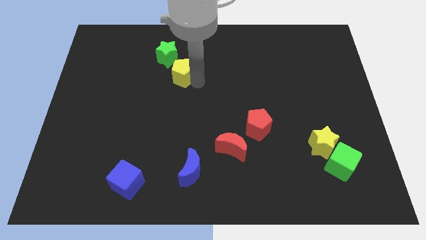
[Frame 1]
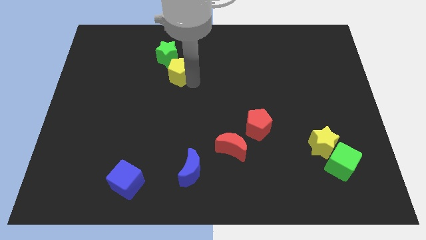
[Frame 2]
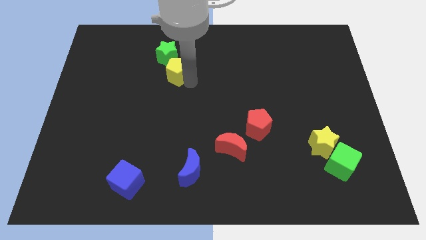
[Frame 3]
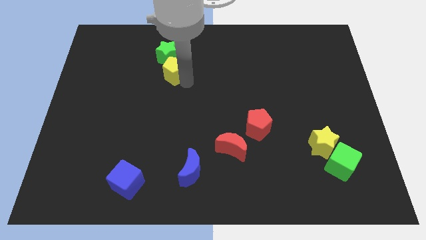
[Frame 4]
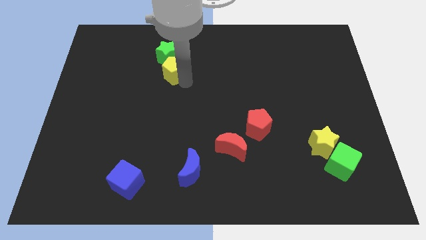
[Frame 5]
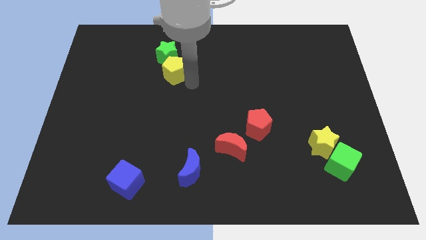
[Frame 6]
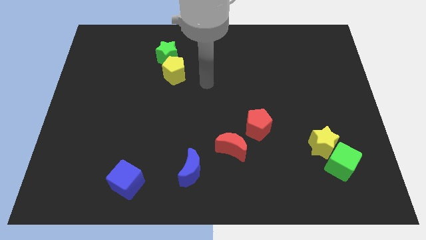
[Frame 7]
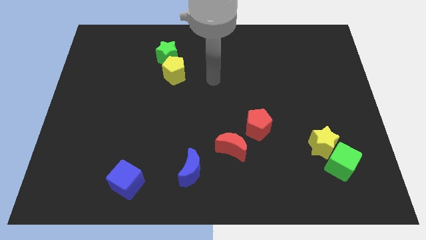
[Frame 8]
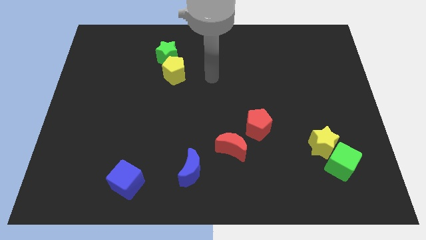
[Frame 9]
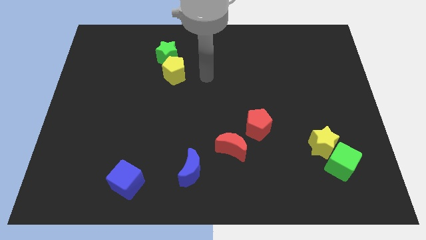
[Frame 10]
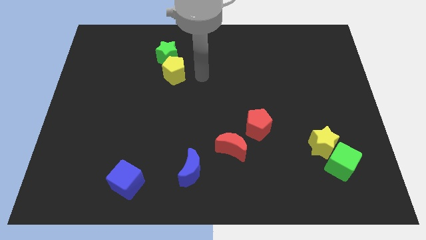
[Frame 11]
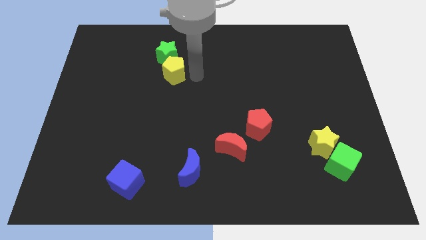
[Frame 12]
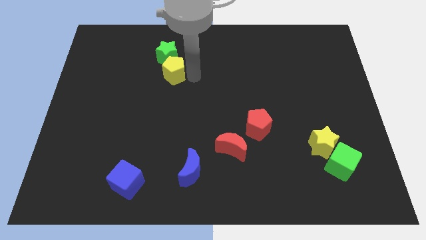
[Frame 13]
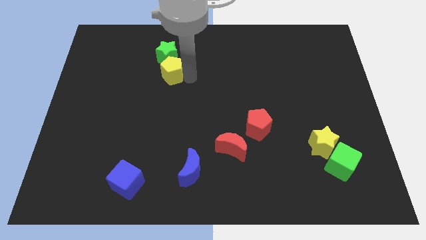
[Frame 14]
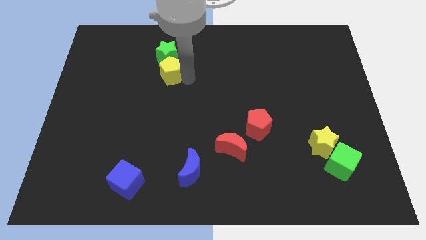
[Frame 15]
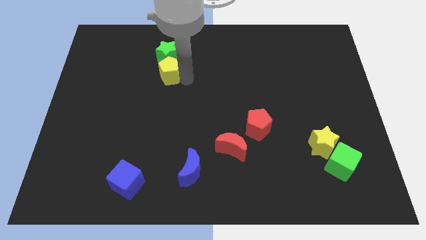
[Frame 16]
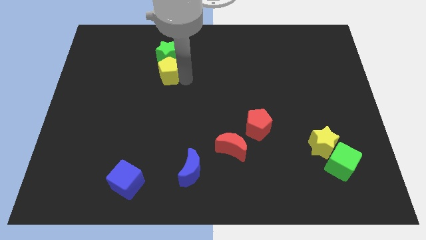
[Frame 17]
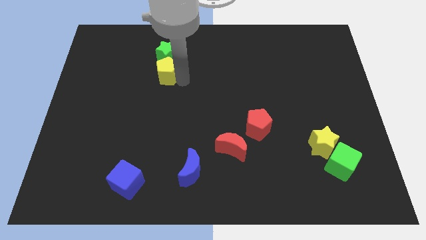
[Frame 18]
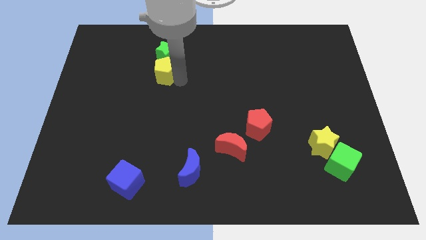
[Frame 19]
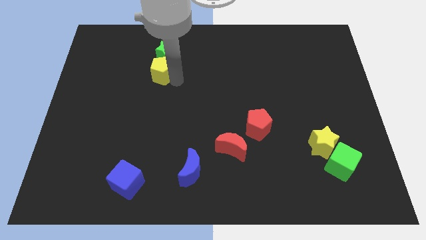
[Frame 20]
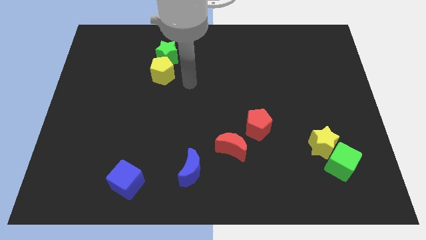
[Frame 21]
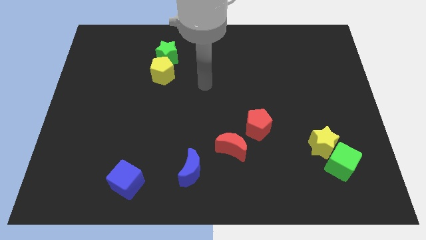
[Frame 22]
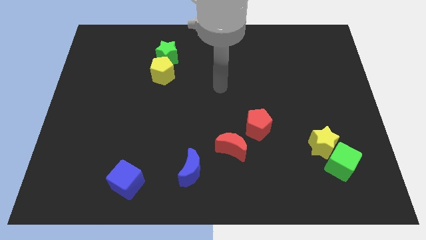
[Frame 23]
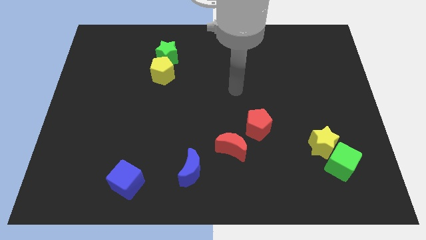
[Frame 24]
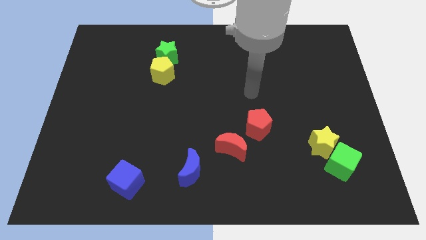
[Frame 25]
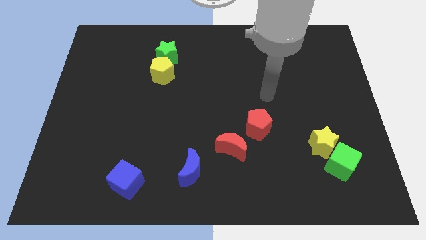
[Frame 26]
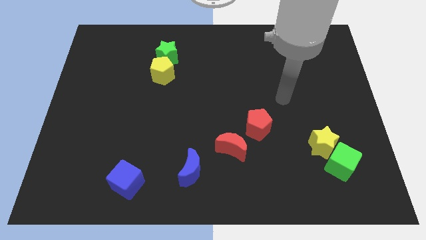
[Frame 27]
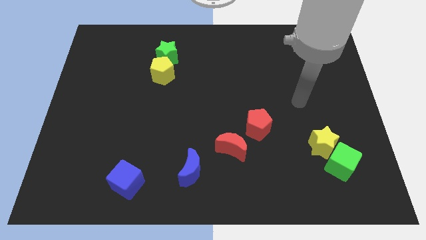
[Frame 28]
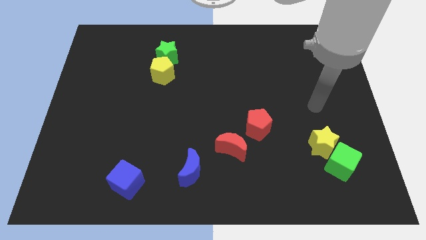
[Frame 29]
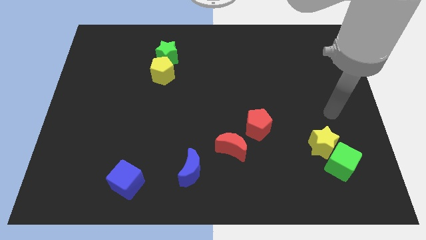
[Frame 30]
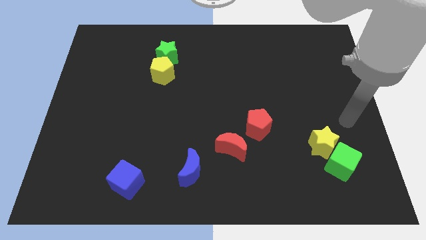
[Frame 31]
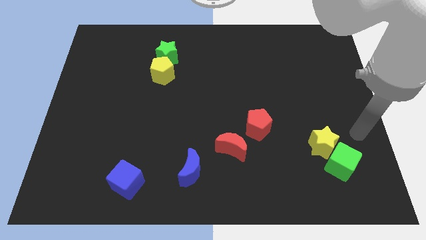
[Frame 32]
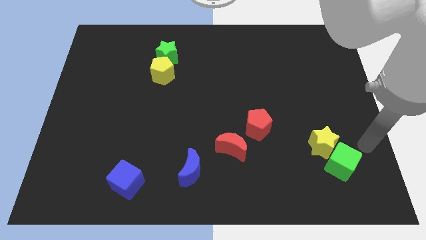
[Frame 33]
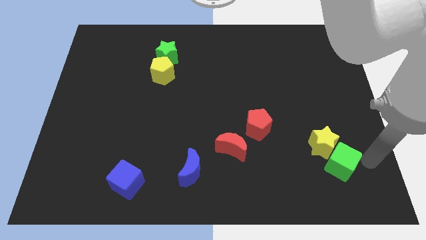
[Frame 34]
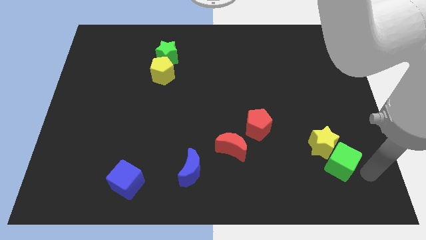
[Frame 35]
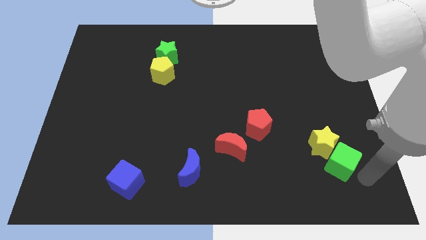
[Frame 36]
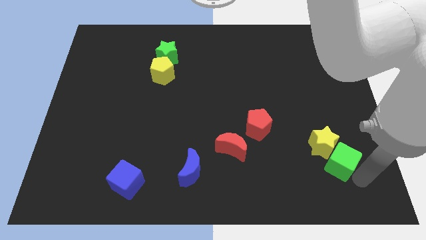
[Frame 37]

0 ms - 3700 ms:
move your arm to the right of the green cube

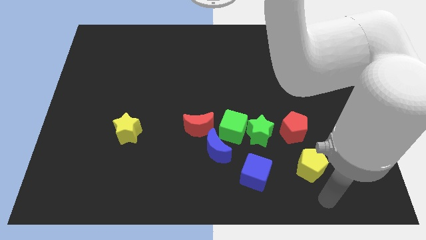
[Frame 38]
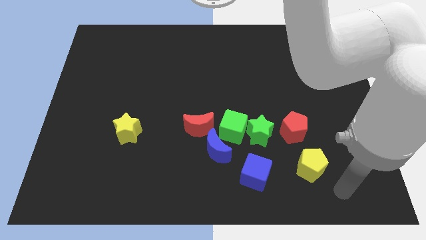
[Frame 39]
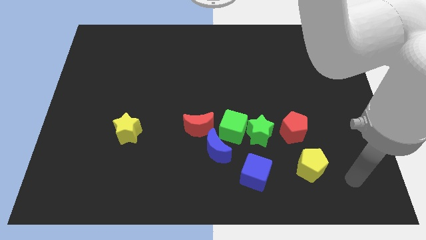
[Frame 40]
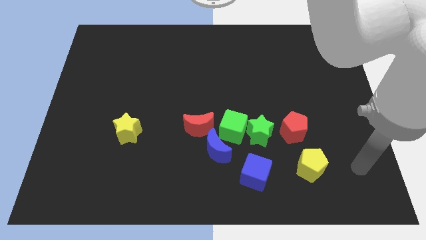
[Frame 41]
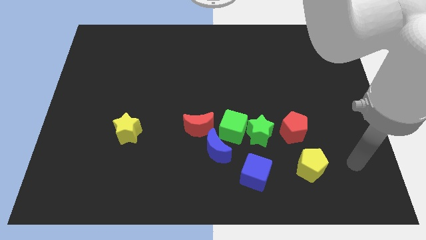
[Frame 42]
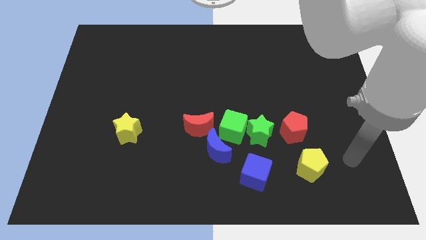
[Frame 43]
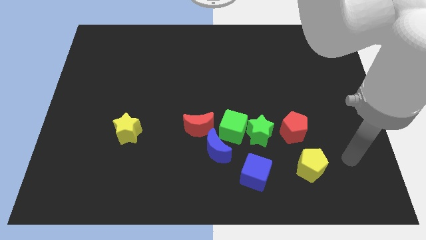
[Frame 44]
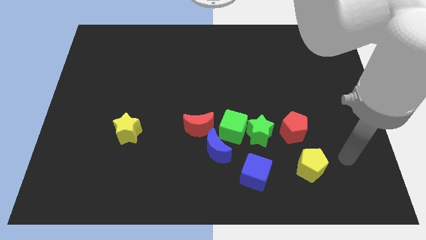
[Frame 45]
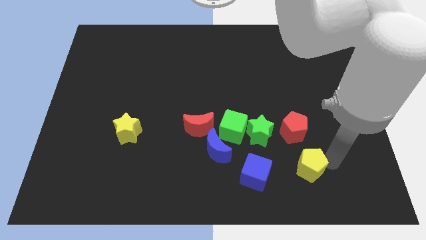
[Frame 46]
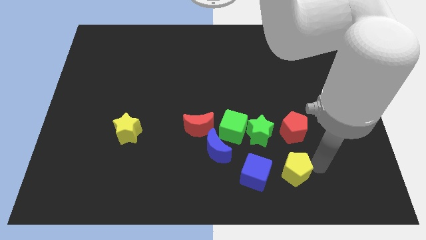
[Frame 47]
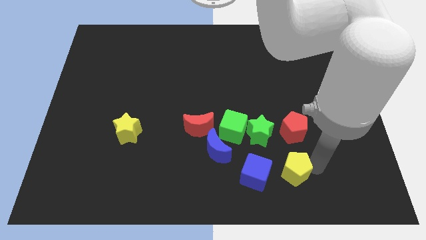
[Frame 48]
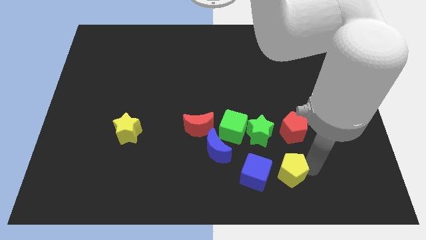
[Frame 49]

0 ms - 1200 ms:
place the yellow pentagon to the right side of blue cube

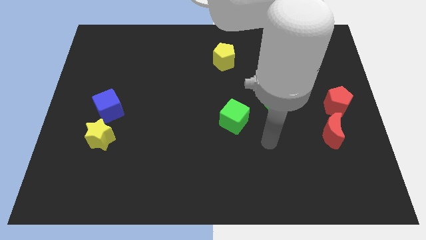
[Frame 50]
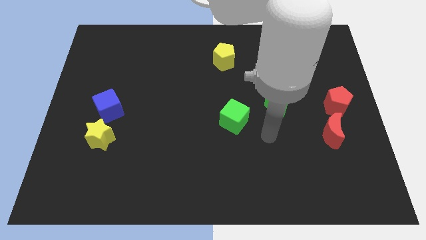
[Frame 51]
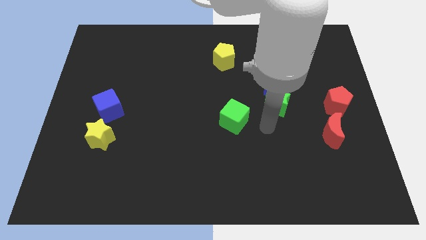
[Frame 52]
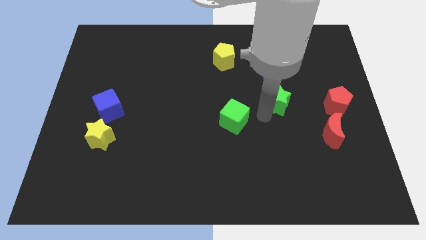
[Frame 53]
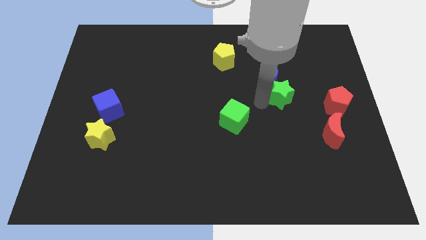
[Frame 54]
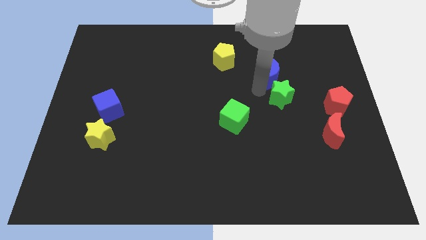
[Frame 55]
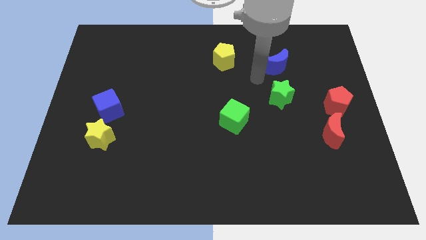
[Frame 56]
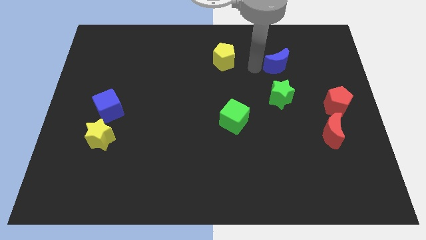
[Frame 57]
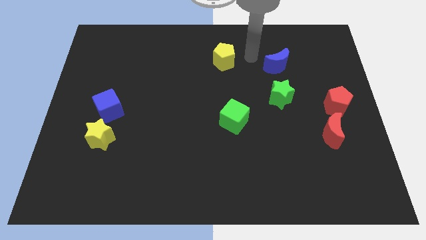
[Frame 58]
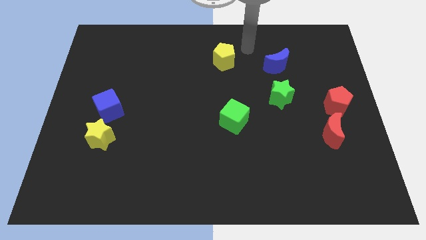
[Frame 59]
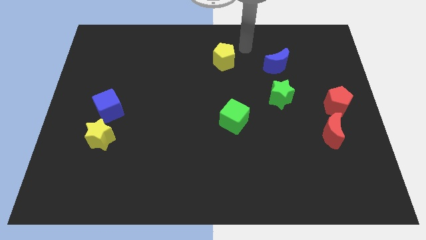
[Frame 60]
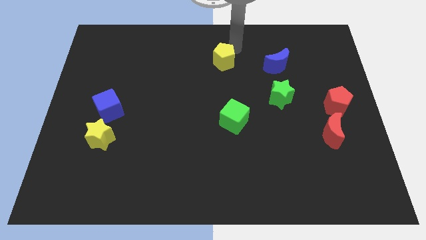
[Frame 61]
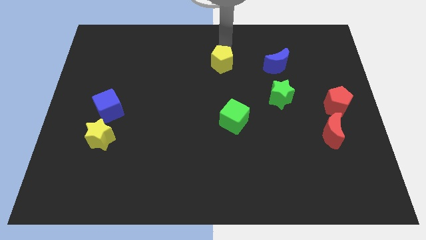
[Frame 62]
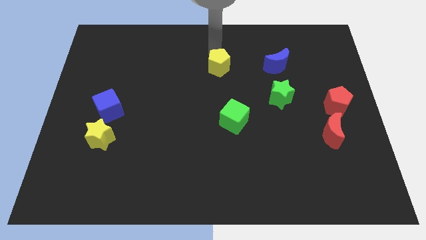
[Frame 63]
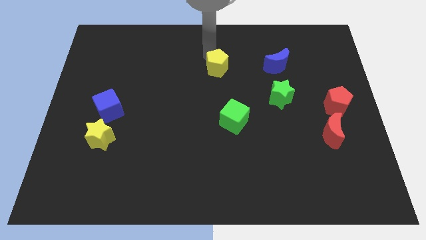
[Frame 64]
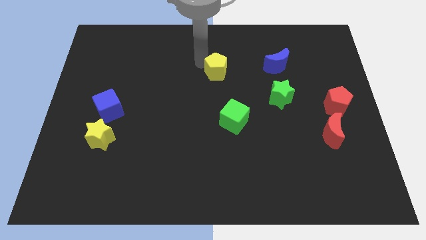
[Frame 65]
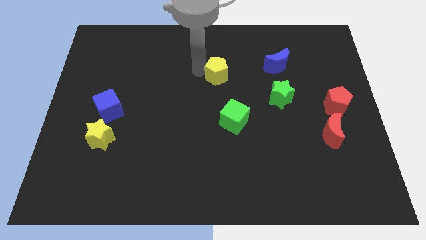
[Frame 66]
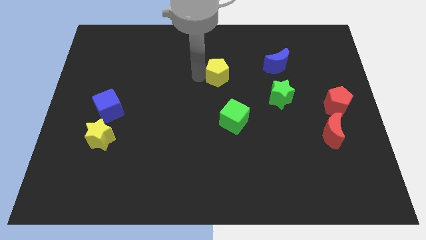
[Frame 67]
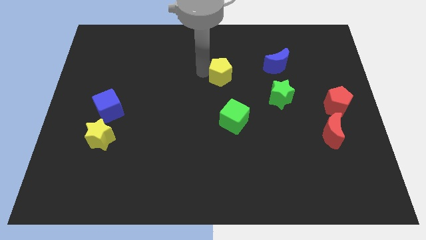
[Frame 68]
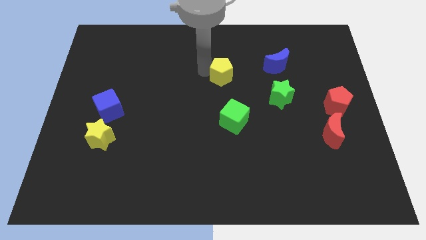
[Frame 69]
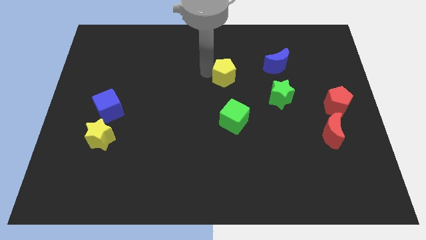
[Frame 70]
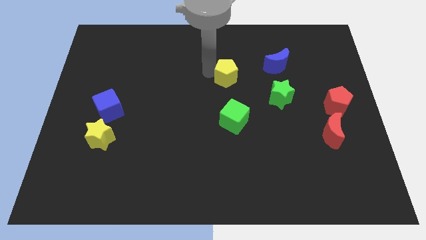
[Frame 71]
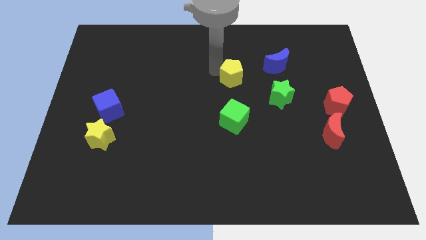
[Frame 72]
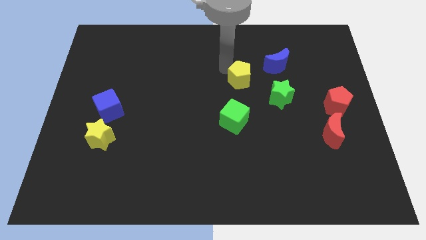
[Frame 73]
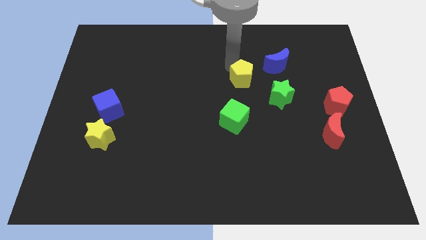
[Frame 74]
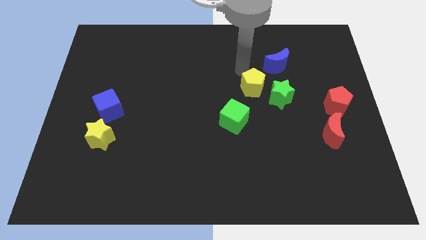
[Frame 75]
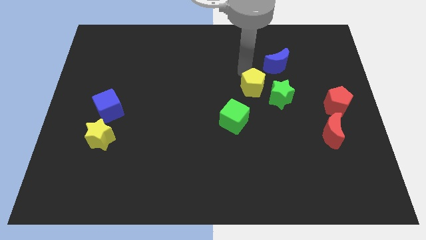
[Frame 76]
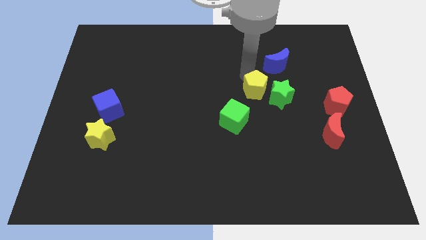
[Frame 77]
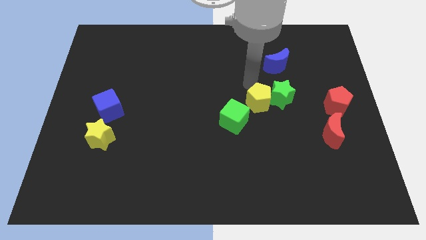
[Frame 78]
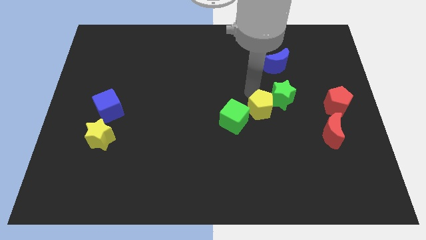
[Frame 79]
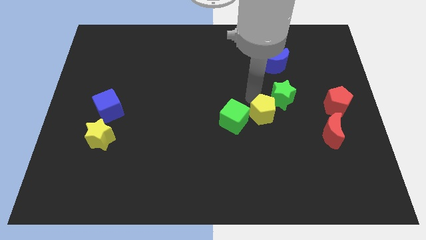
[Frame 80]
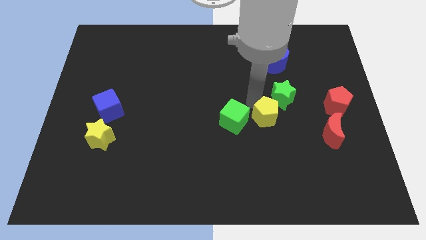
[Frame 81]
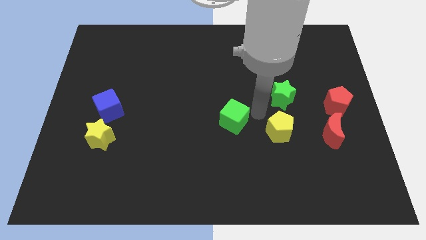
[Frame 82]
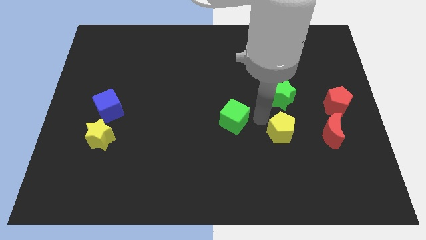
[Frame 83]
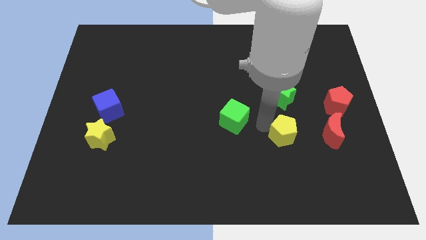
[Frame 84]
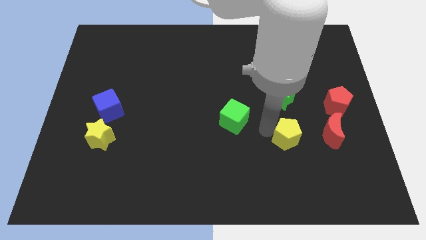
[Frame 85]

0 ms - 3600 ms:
push the yellow block to the bottom of the green star

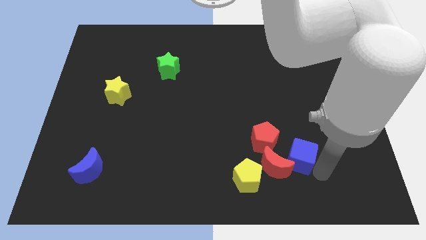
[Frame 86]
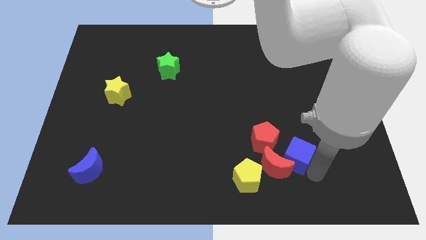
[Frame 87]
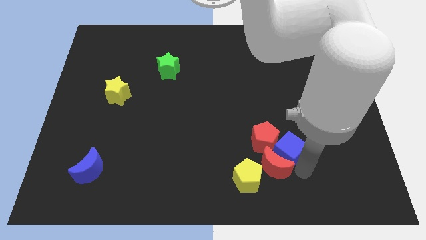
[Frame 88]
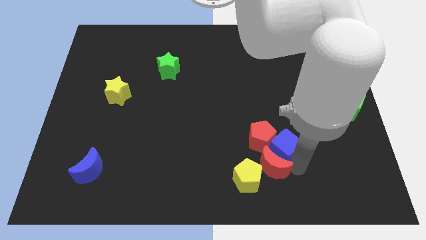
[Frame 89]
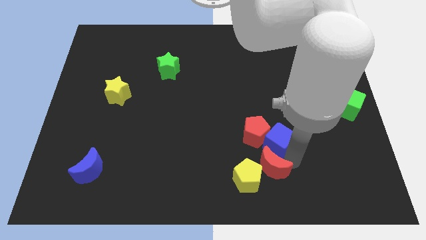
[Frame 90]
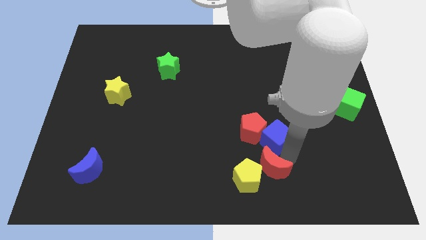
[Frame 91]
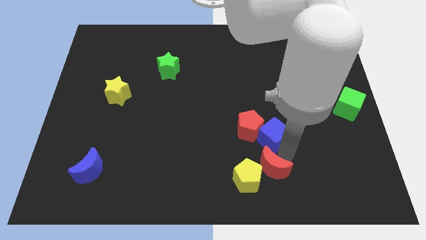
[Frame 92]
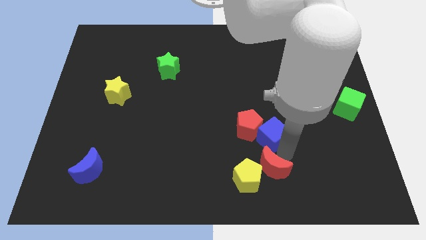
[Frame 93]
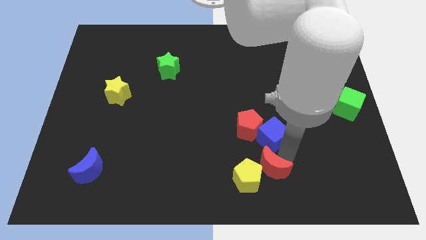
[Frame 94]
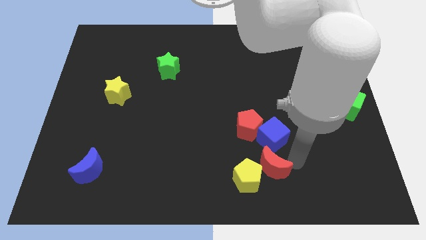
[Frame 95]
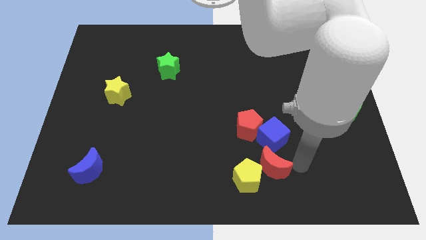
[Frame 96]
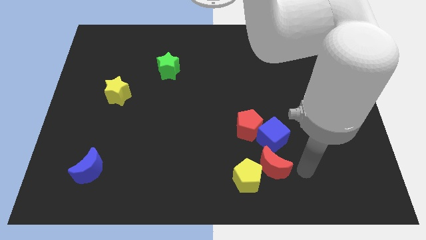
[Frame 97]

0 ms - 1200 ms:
push the blue cube with red pentagon to the center
